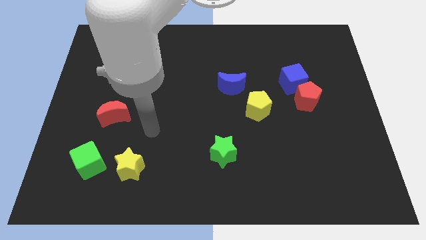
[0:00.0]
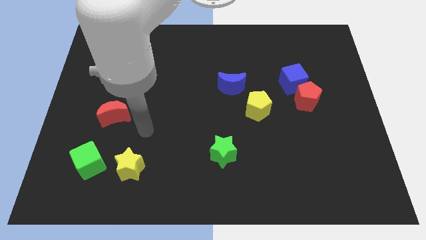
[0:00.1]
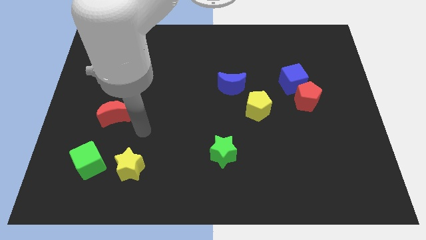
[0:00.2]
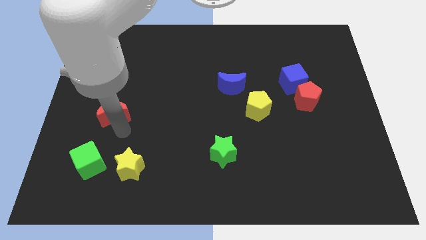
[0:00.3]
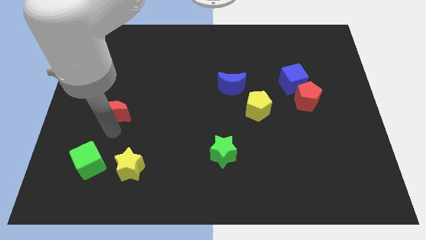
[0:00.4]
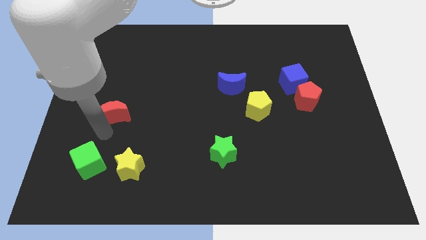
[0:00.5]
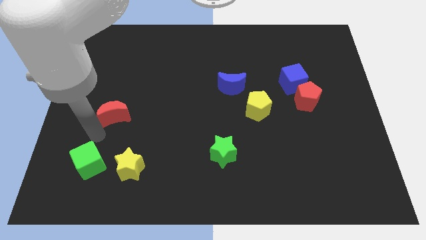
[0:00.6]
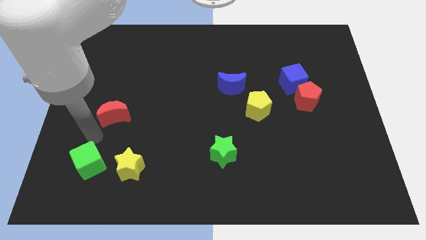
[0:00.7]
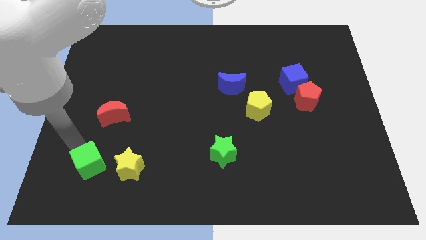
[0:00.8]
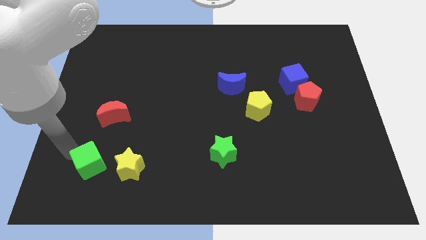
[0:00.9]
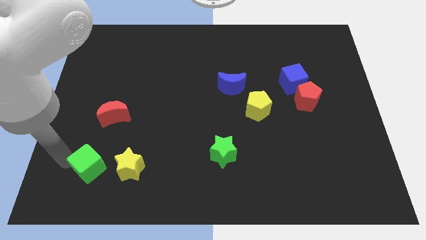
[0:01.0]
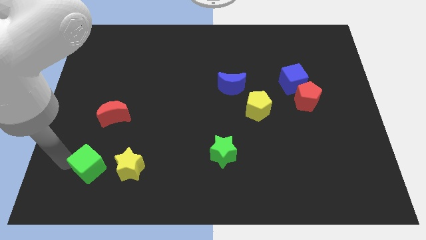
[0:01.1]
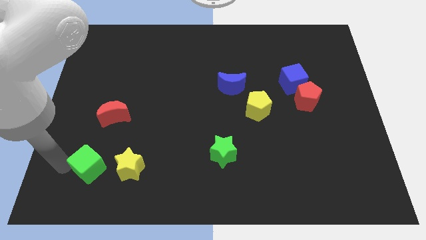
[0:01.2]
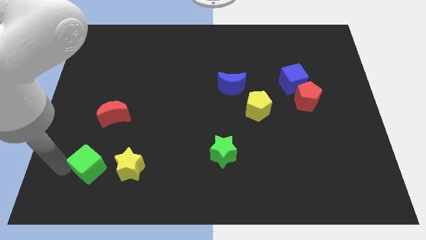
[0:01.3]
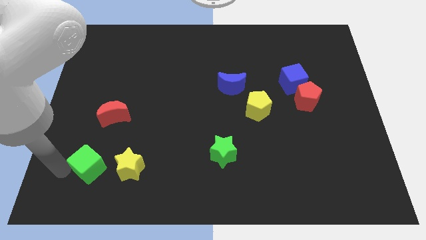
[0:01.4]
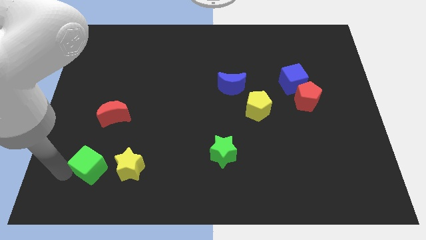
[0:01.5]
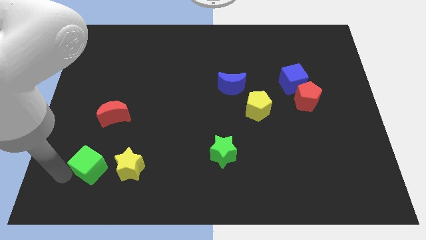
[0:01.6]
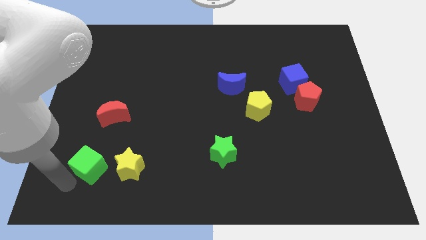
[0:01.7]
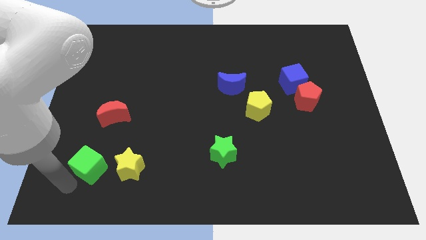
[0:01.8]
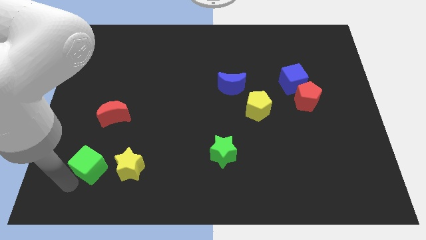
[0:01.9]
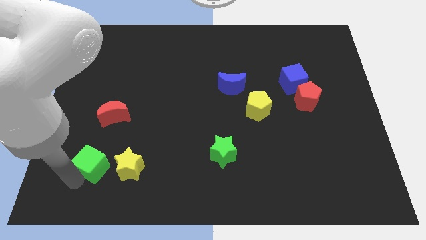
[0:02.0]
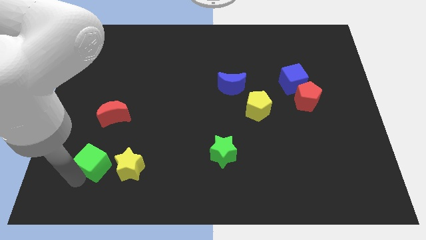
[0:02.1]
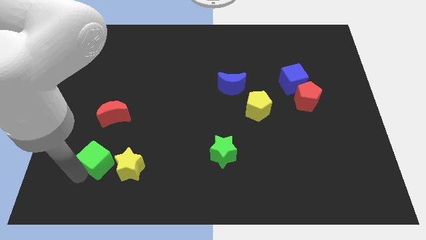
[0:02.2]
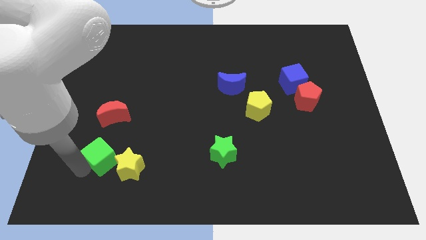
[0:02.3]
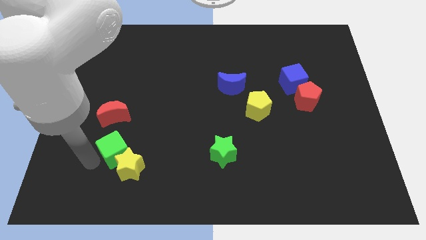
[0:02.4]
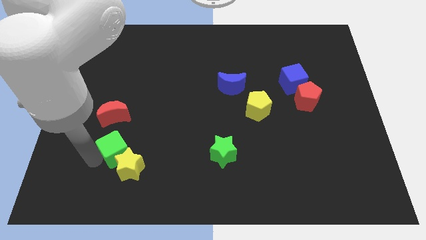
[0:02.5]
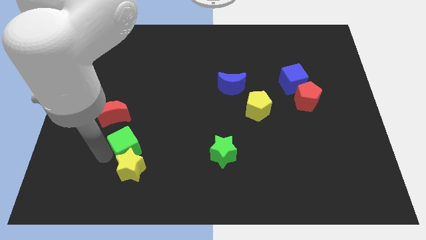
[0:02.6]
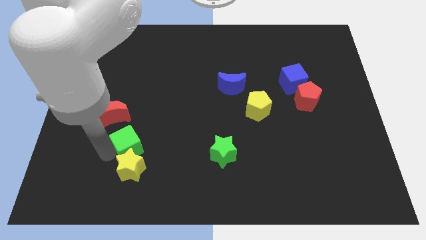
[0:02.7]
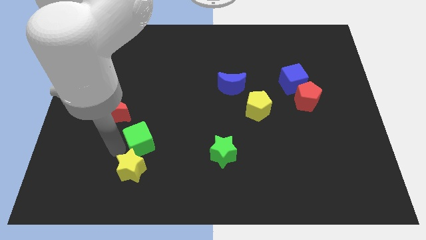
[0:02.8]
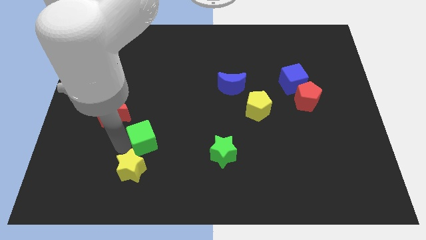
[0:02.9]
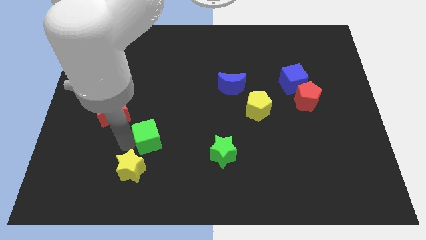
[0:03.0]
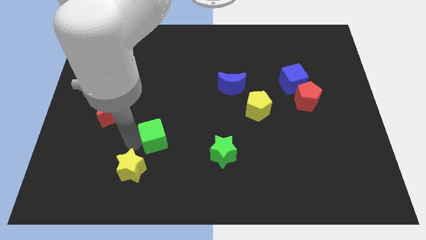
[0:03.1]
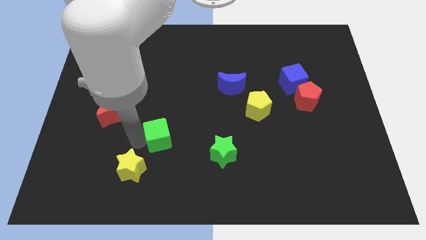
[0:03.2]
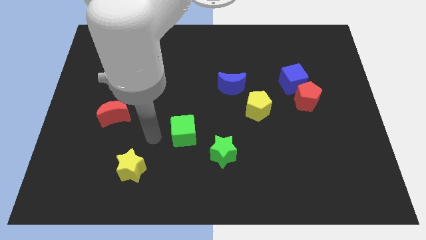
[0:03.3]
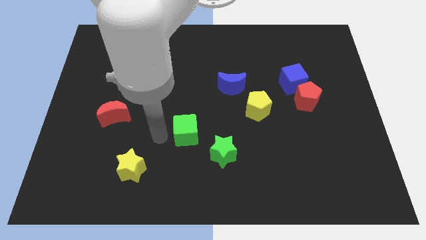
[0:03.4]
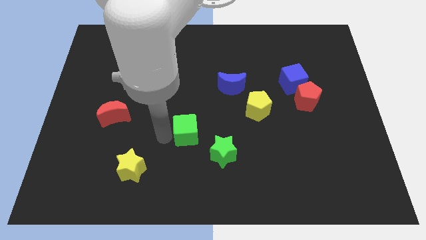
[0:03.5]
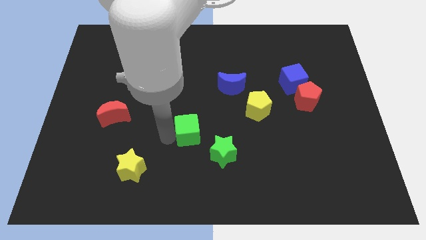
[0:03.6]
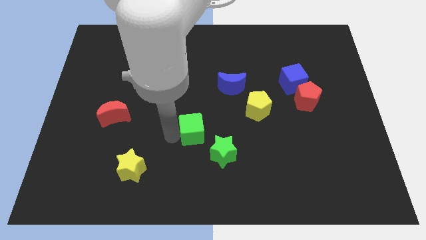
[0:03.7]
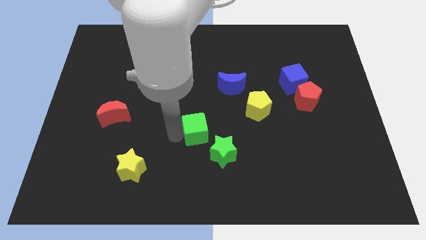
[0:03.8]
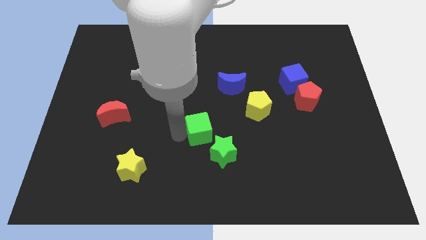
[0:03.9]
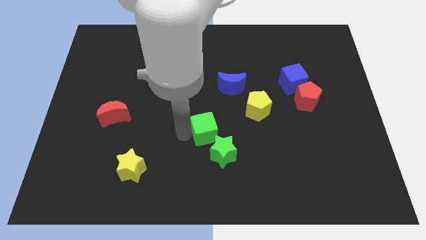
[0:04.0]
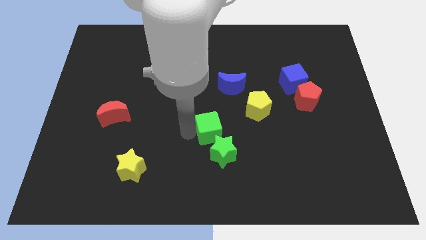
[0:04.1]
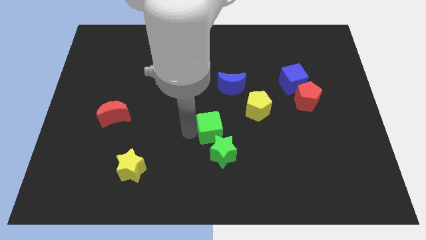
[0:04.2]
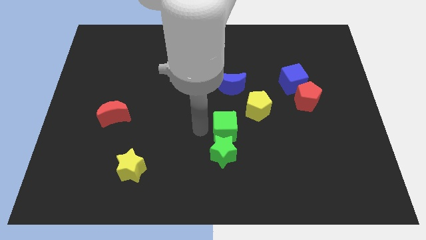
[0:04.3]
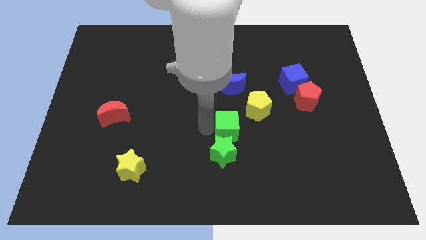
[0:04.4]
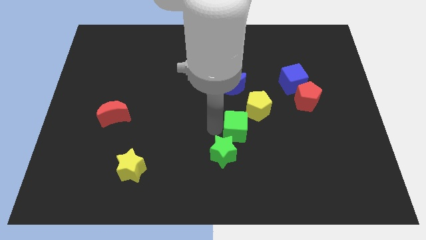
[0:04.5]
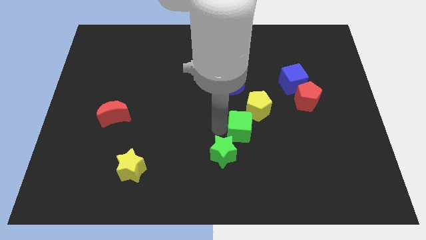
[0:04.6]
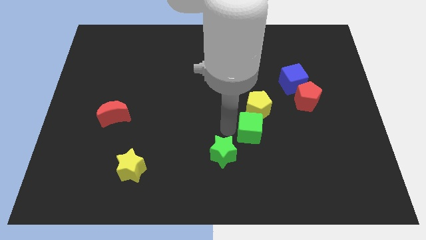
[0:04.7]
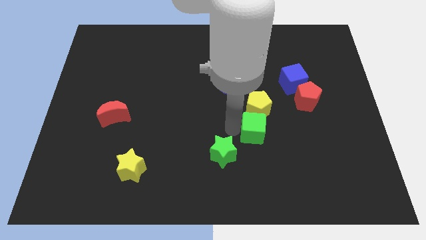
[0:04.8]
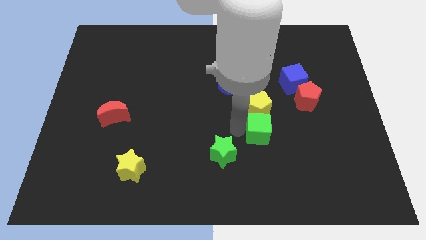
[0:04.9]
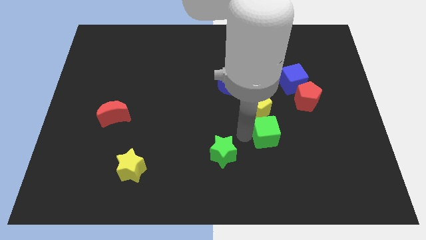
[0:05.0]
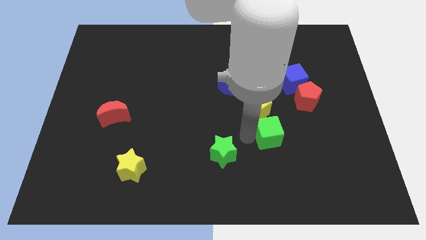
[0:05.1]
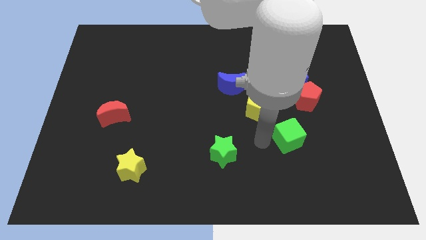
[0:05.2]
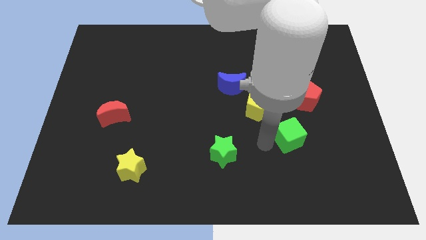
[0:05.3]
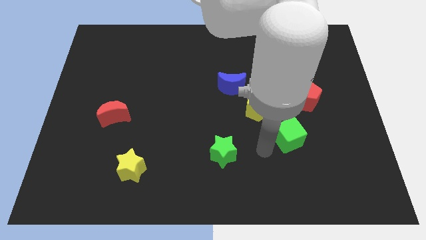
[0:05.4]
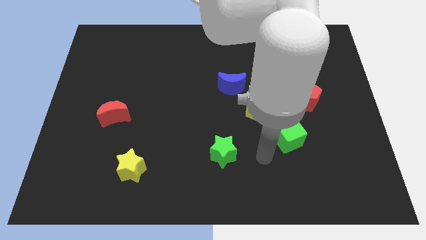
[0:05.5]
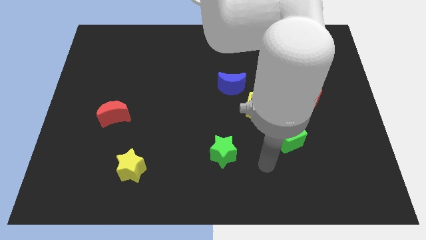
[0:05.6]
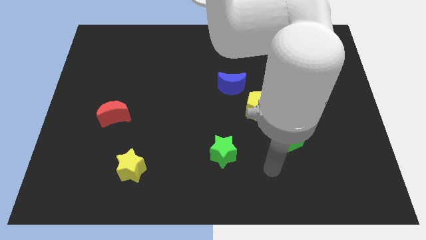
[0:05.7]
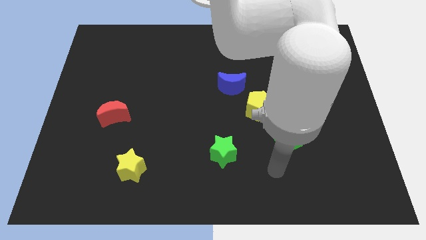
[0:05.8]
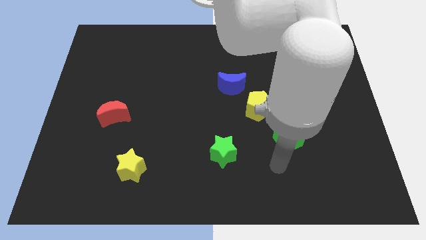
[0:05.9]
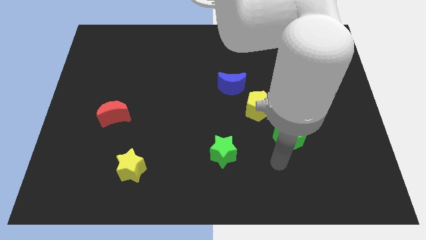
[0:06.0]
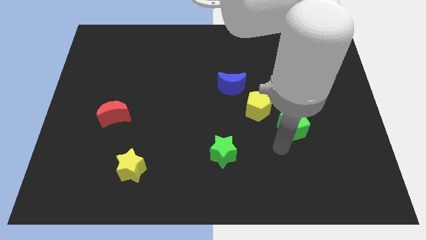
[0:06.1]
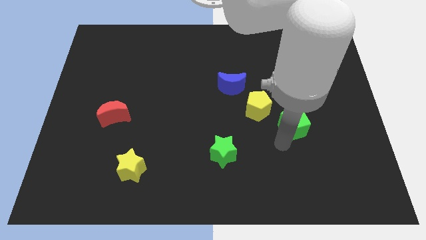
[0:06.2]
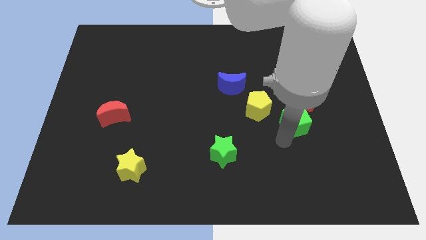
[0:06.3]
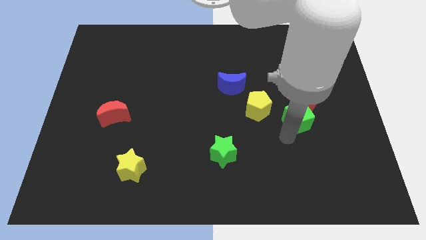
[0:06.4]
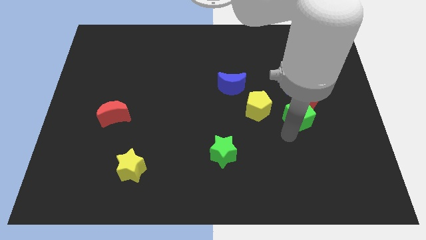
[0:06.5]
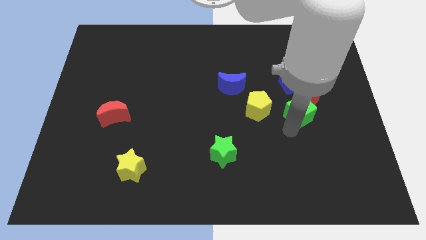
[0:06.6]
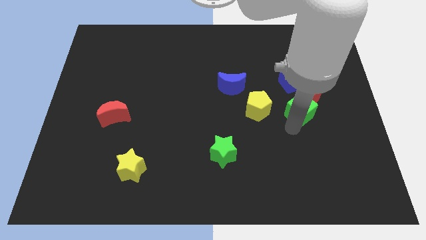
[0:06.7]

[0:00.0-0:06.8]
move the green cube towards the red pentagon

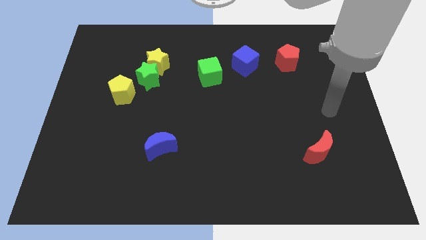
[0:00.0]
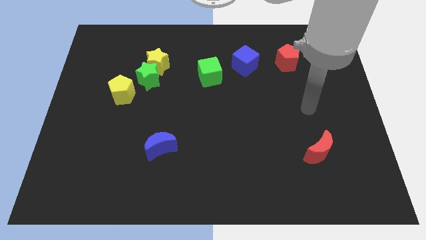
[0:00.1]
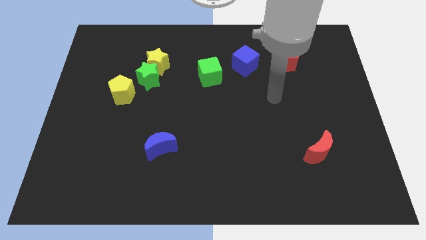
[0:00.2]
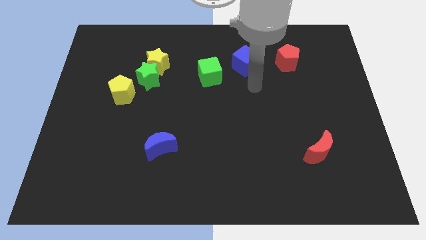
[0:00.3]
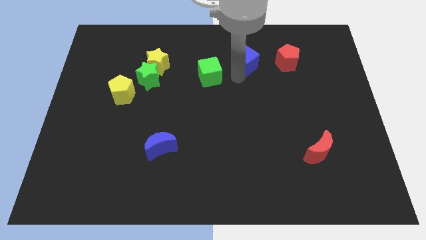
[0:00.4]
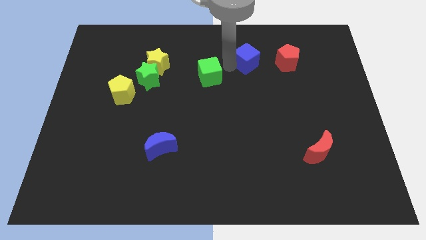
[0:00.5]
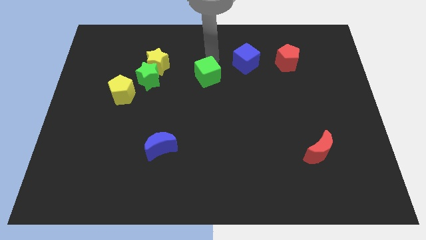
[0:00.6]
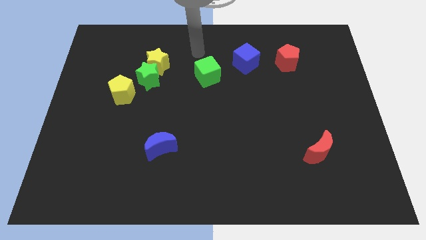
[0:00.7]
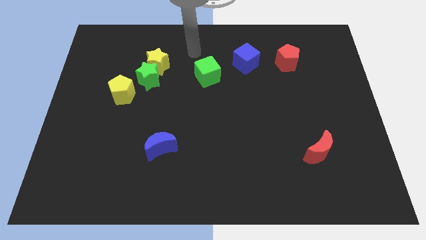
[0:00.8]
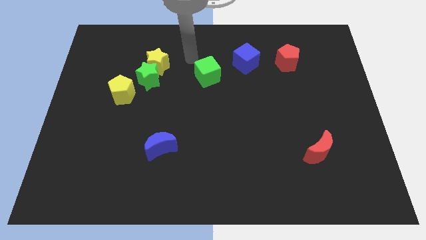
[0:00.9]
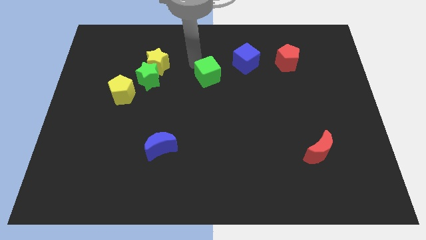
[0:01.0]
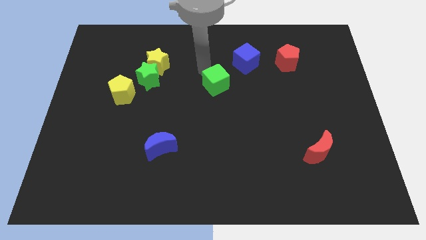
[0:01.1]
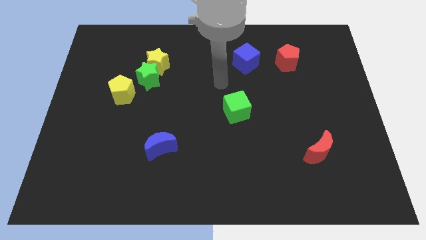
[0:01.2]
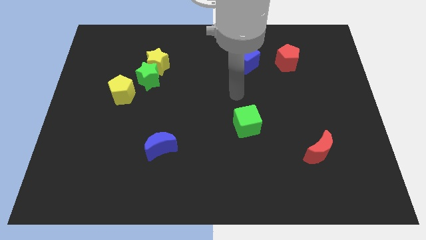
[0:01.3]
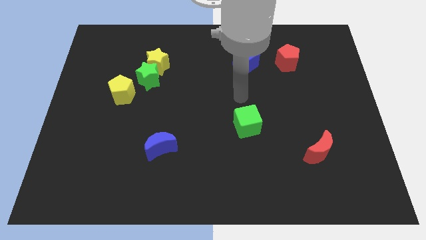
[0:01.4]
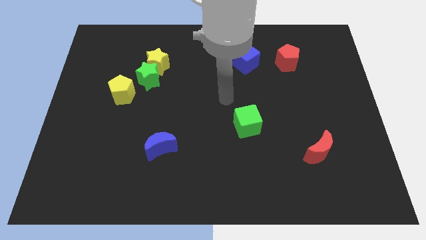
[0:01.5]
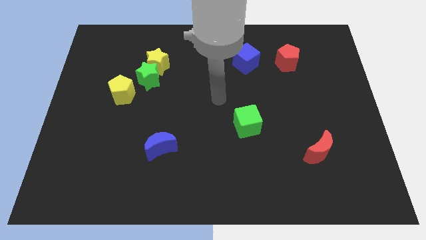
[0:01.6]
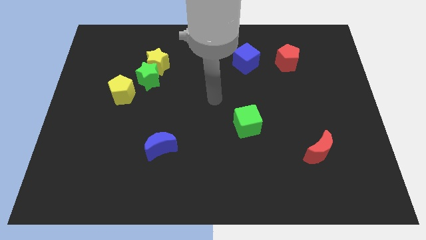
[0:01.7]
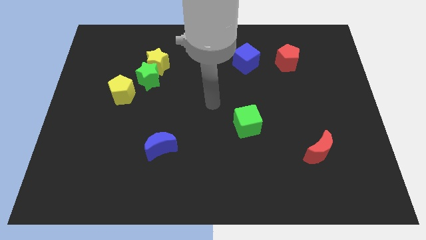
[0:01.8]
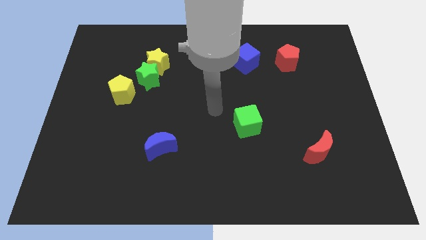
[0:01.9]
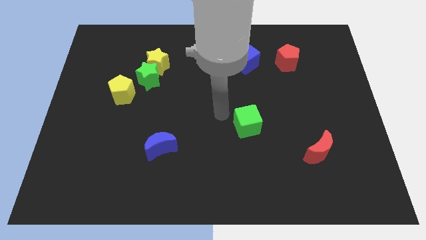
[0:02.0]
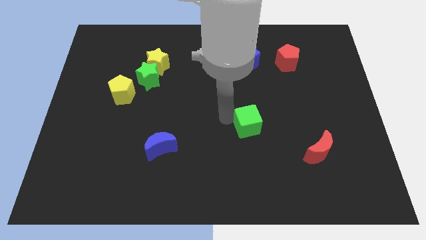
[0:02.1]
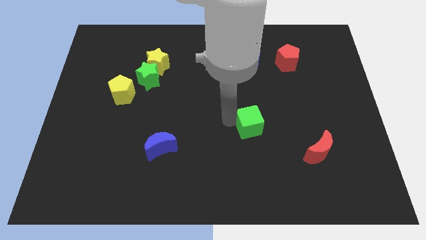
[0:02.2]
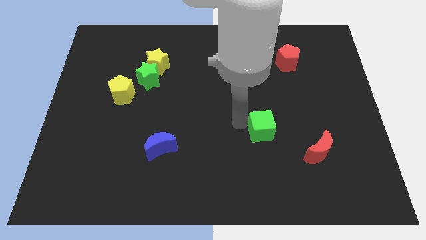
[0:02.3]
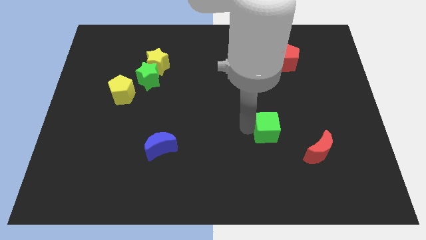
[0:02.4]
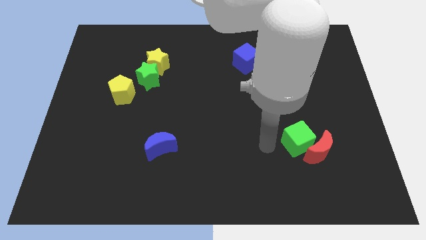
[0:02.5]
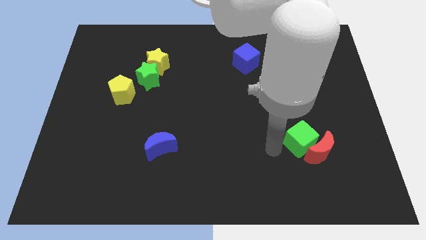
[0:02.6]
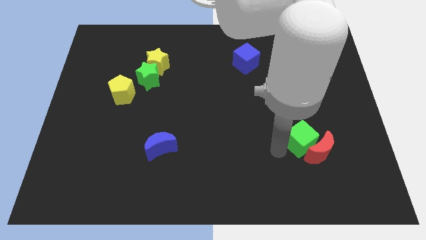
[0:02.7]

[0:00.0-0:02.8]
slide the green cube to the red moon
